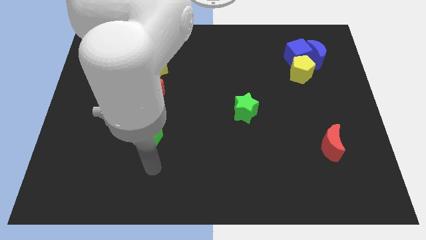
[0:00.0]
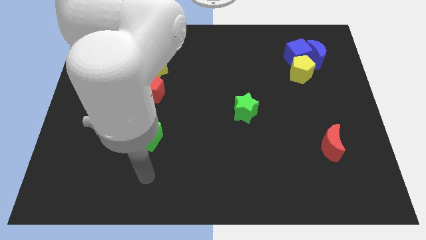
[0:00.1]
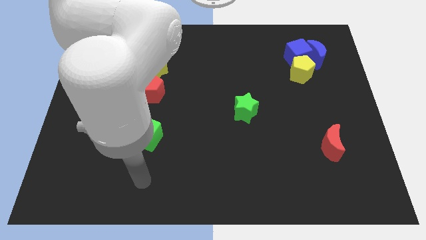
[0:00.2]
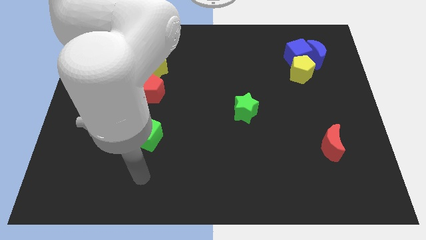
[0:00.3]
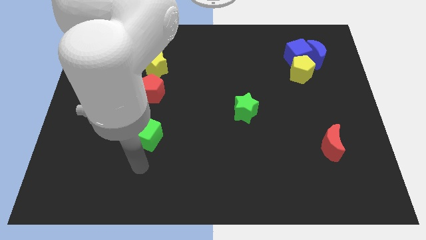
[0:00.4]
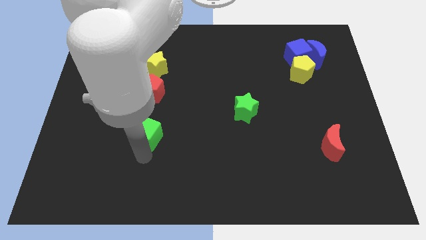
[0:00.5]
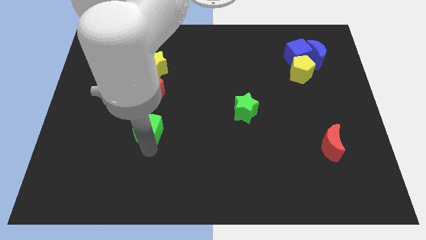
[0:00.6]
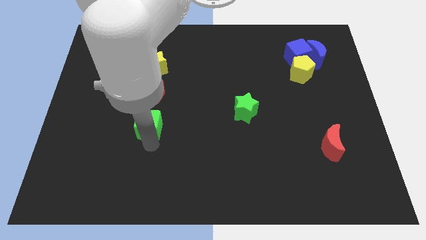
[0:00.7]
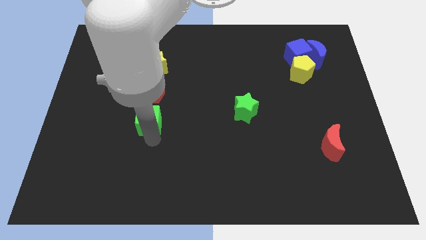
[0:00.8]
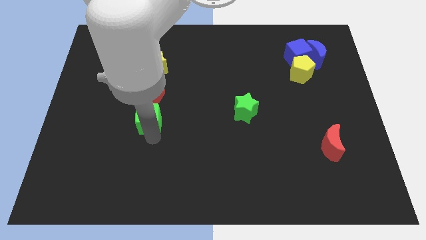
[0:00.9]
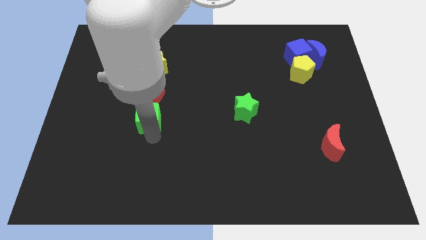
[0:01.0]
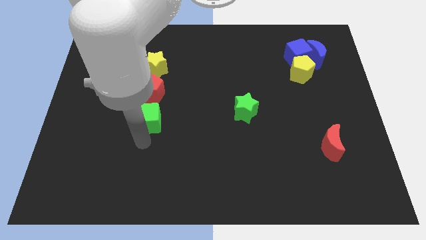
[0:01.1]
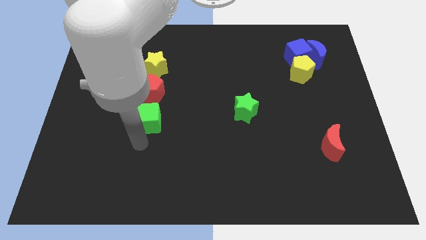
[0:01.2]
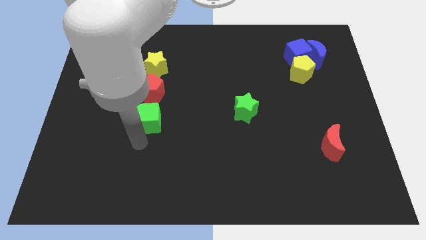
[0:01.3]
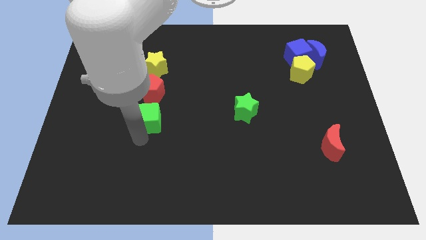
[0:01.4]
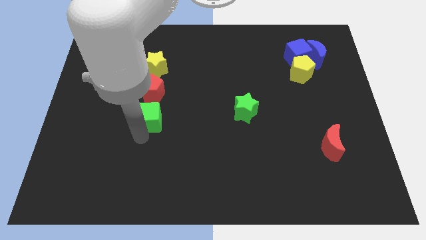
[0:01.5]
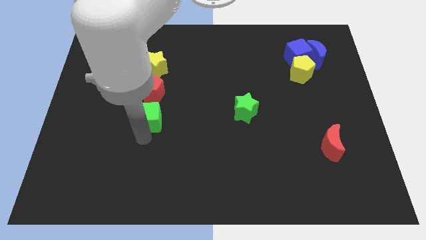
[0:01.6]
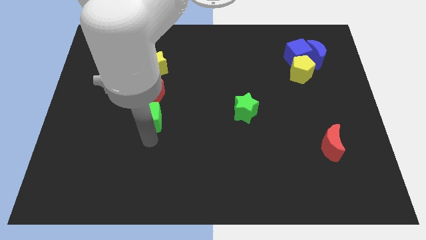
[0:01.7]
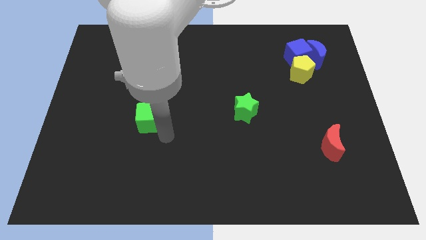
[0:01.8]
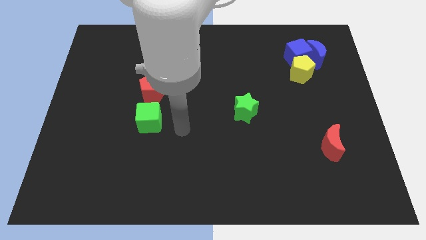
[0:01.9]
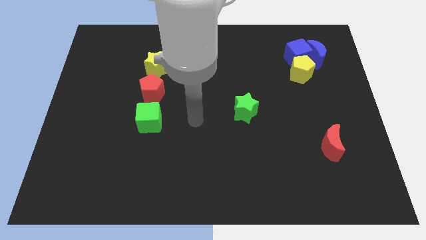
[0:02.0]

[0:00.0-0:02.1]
push the green cube slightly up

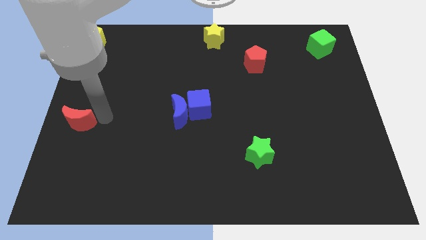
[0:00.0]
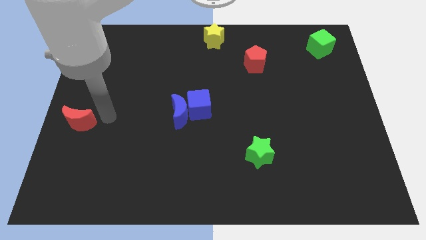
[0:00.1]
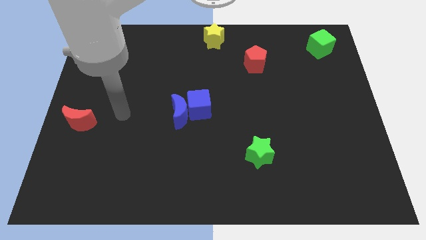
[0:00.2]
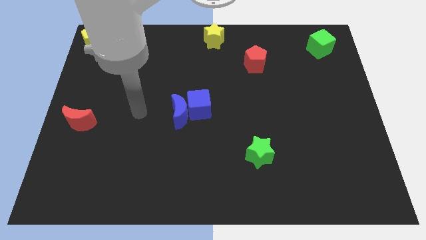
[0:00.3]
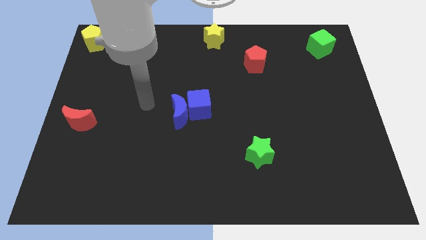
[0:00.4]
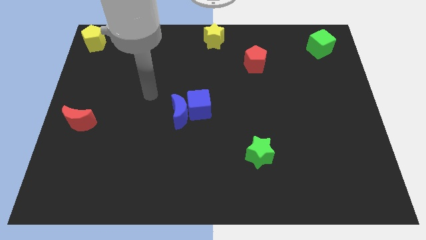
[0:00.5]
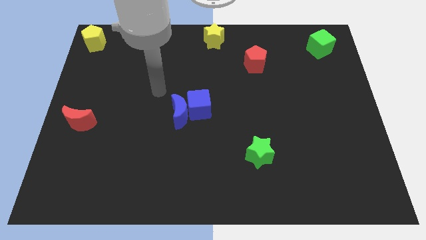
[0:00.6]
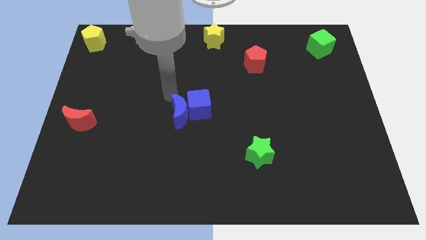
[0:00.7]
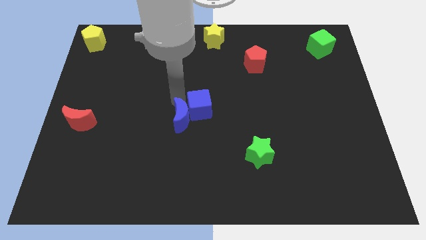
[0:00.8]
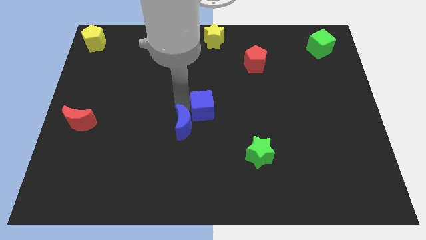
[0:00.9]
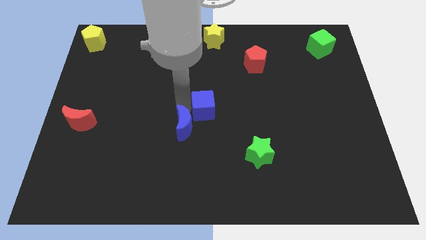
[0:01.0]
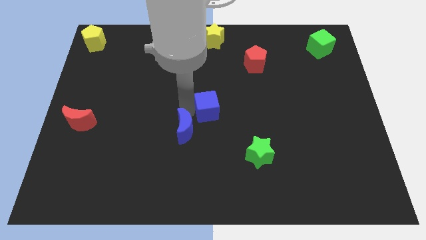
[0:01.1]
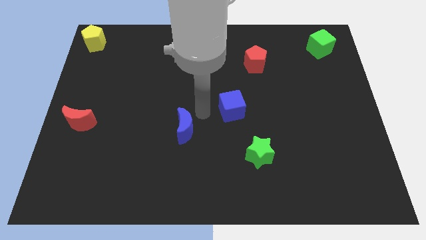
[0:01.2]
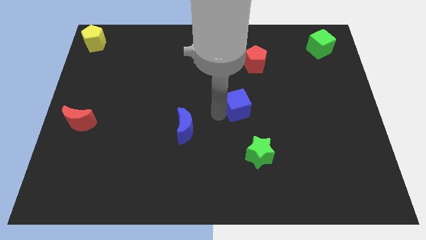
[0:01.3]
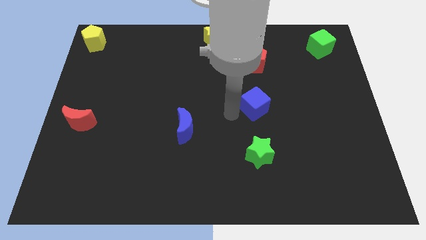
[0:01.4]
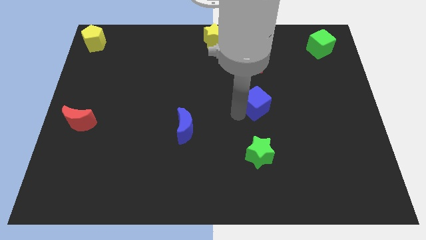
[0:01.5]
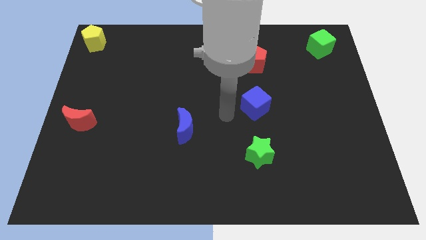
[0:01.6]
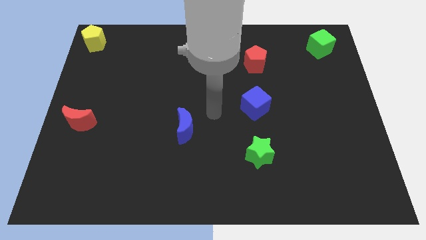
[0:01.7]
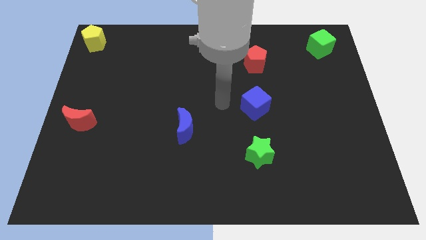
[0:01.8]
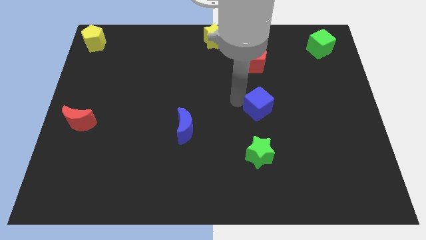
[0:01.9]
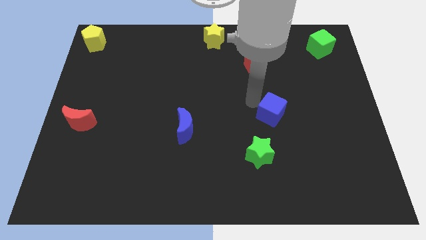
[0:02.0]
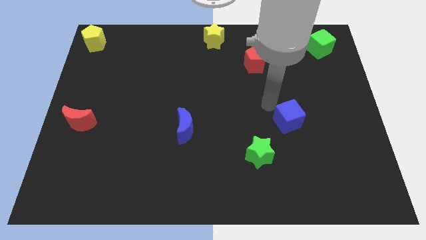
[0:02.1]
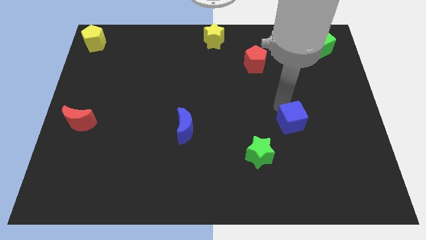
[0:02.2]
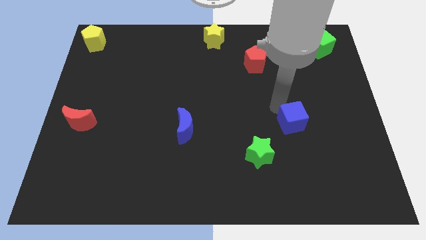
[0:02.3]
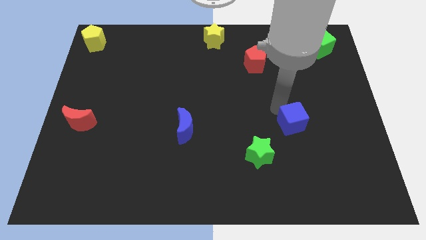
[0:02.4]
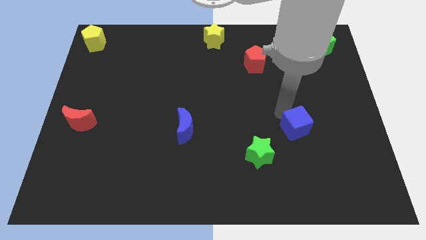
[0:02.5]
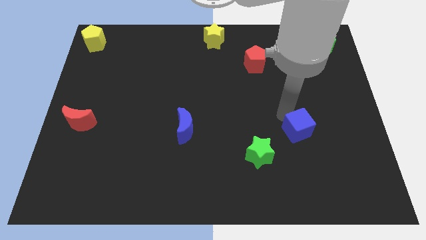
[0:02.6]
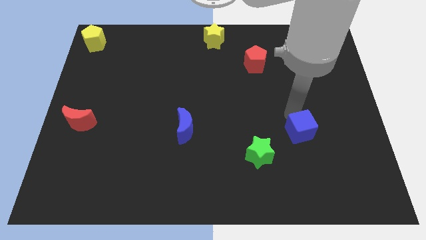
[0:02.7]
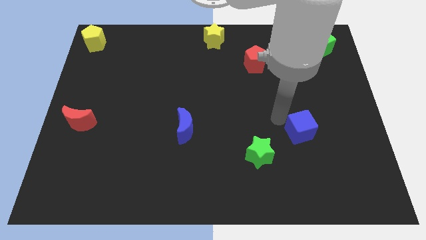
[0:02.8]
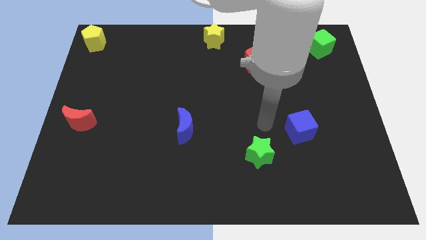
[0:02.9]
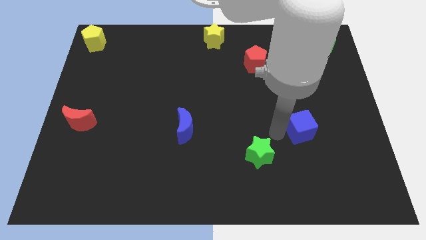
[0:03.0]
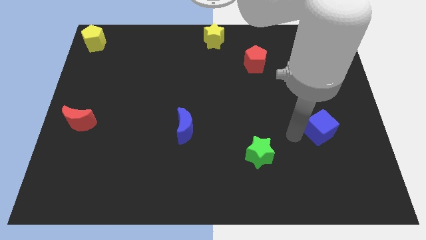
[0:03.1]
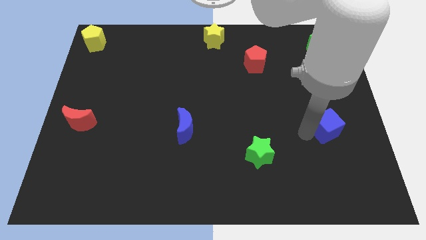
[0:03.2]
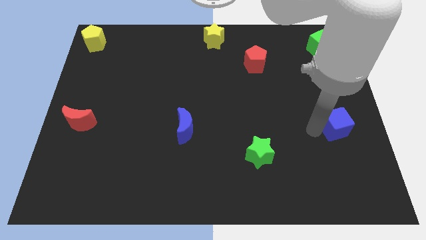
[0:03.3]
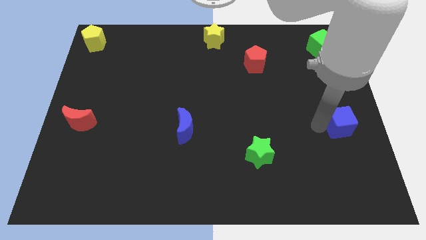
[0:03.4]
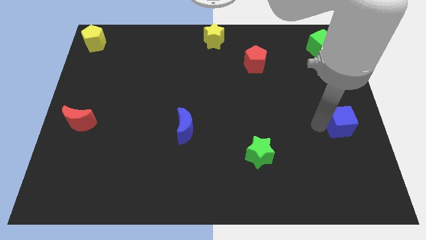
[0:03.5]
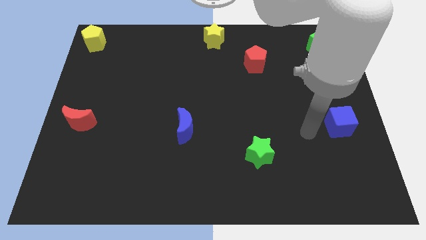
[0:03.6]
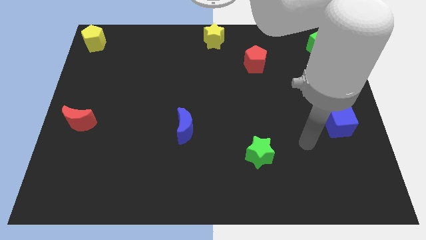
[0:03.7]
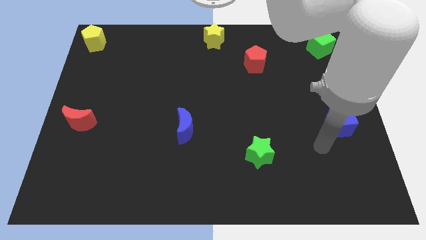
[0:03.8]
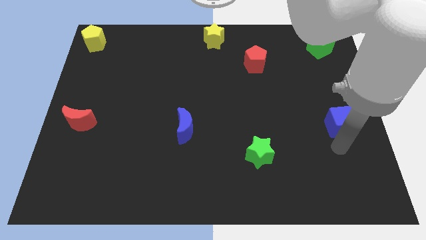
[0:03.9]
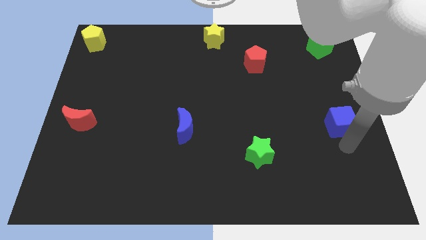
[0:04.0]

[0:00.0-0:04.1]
separate the blue cube fromt he right side of the blue crescent

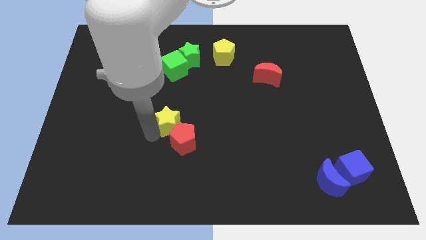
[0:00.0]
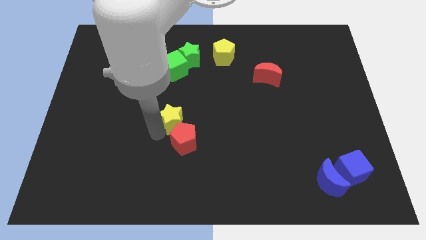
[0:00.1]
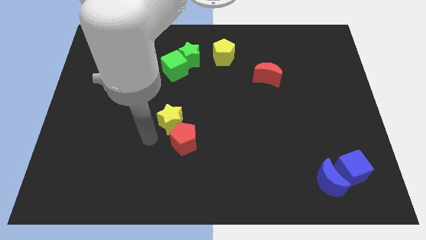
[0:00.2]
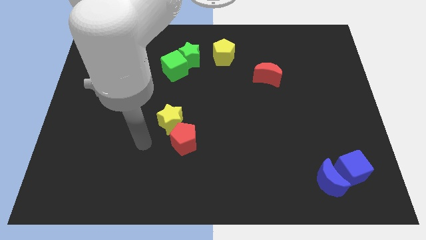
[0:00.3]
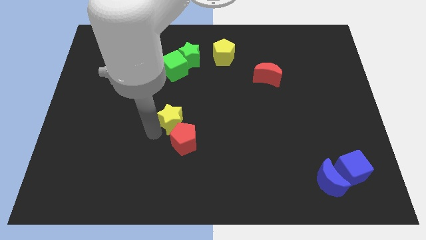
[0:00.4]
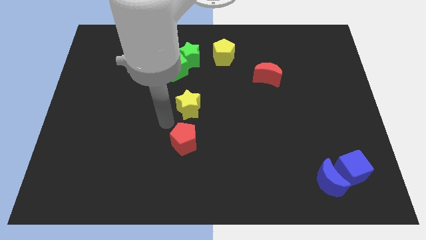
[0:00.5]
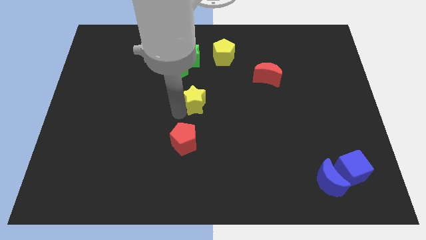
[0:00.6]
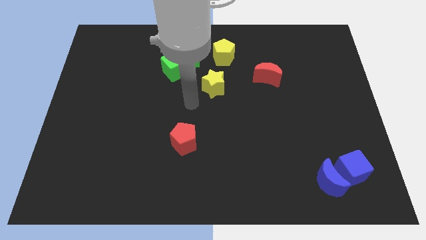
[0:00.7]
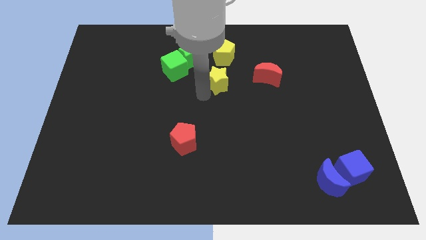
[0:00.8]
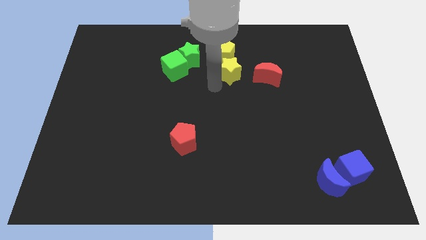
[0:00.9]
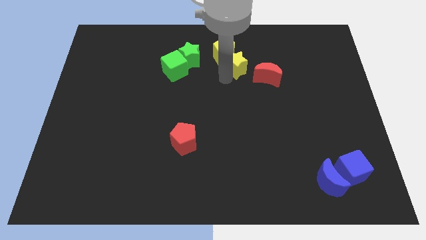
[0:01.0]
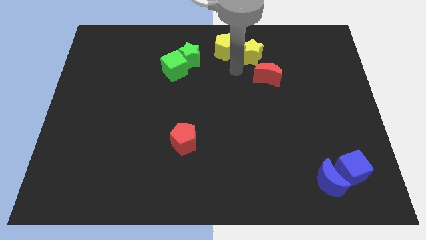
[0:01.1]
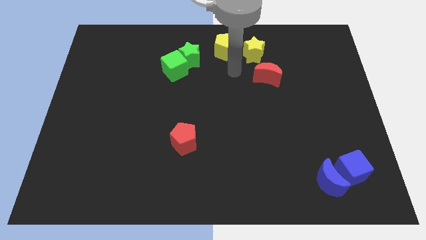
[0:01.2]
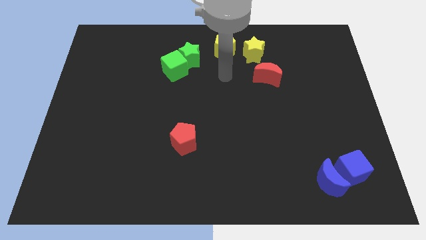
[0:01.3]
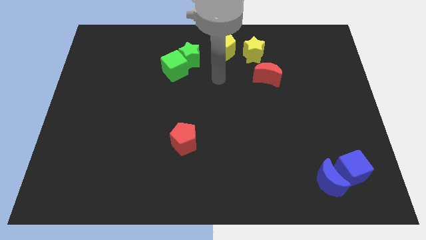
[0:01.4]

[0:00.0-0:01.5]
separate the yellow star towards right of yellow pentagon

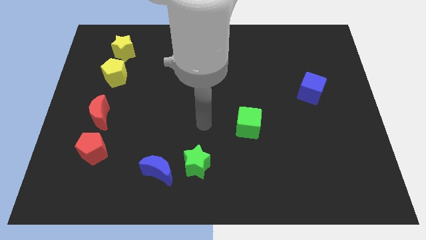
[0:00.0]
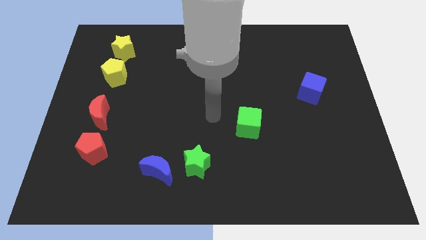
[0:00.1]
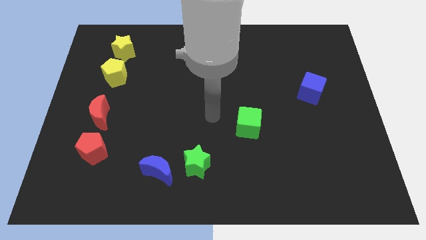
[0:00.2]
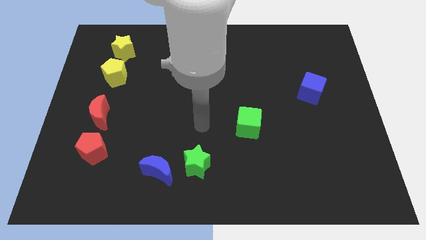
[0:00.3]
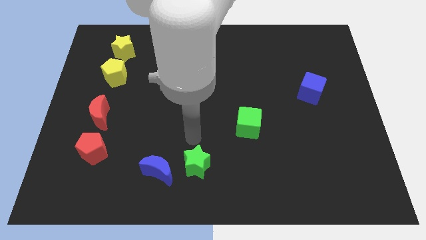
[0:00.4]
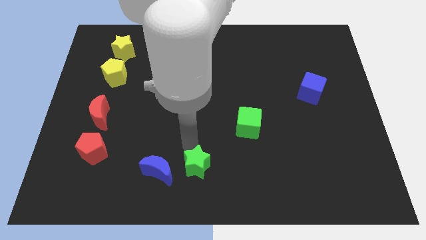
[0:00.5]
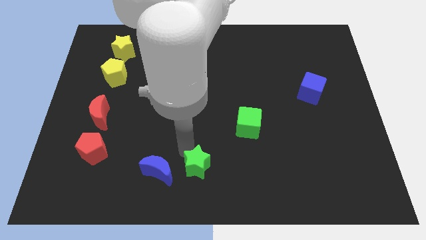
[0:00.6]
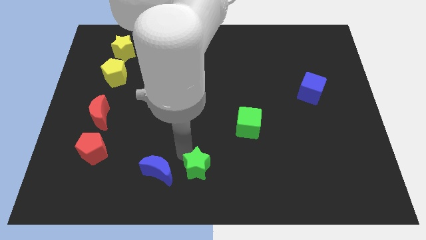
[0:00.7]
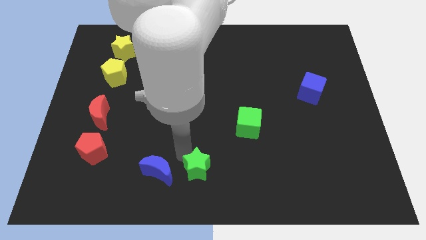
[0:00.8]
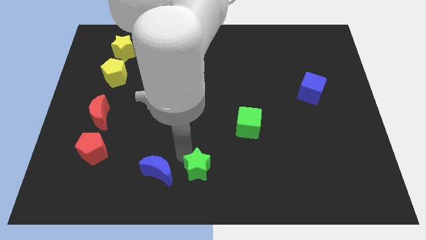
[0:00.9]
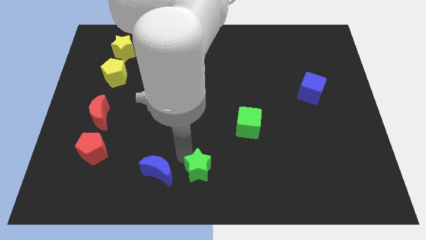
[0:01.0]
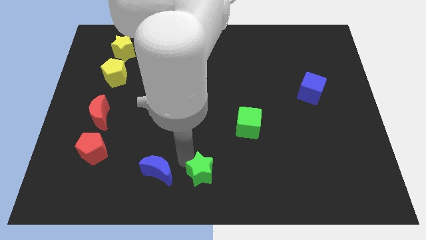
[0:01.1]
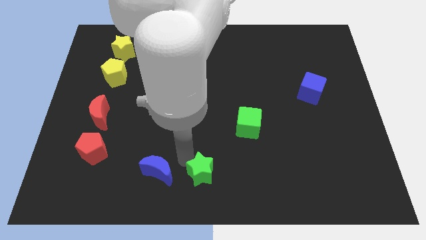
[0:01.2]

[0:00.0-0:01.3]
put the green star to the right of the blue crescent

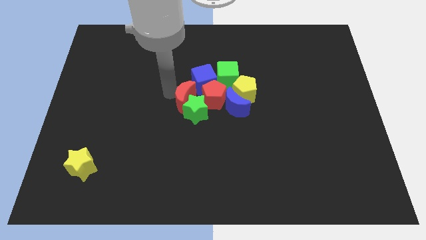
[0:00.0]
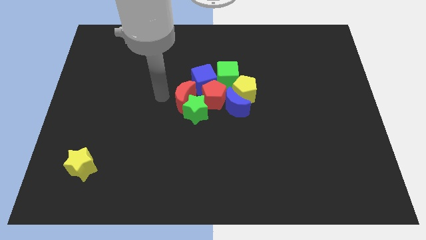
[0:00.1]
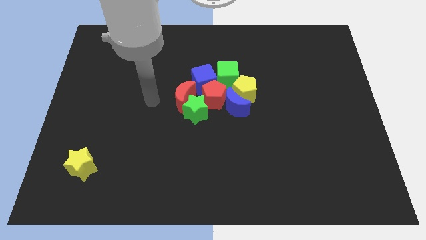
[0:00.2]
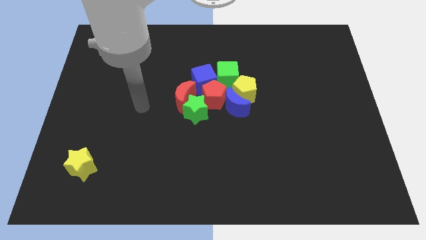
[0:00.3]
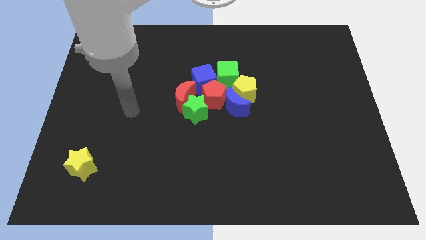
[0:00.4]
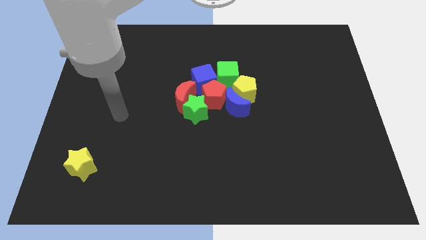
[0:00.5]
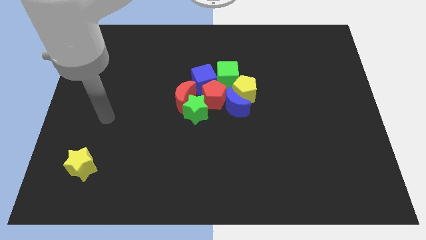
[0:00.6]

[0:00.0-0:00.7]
move the arm away from the red moon
